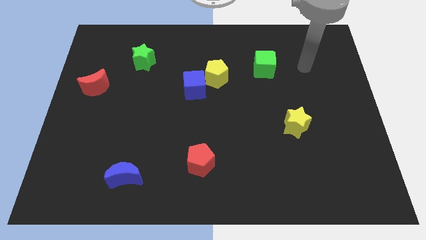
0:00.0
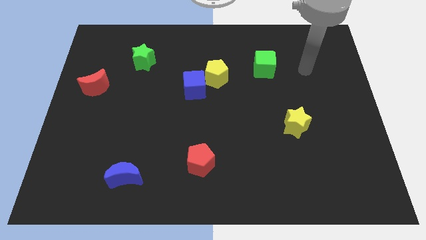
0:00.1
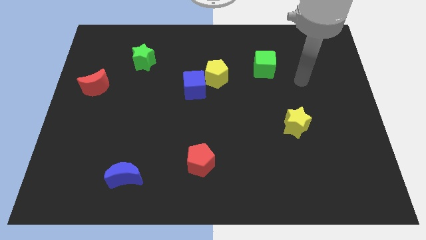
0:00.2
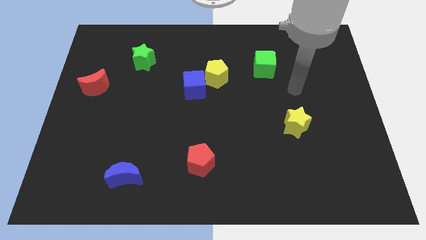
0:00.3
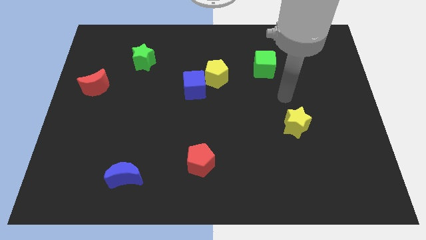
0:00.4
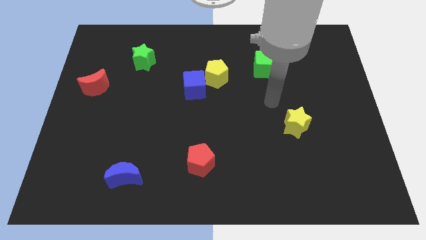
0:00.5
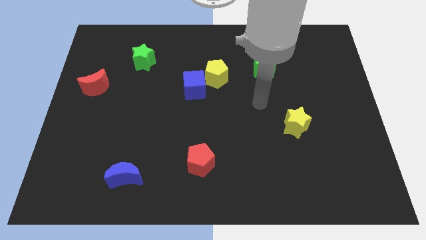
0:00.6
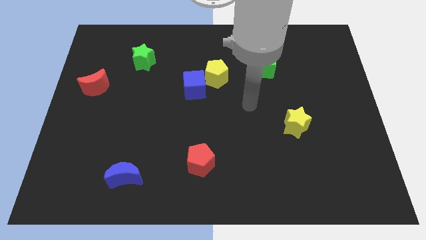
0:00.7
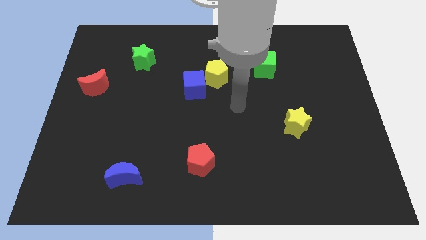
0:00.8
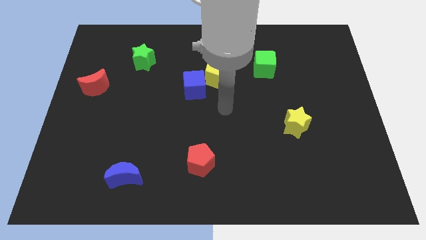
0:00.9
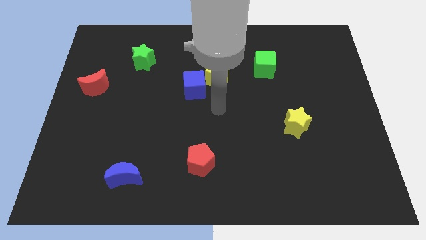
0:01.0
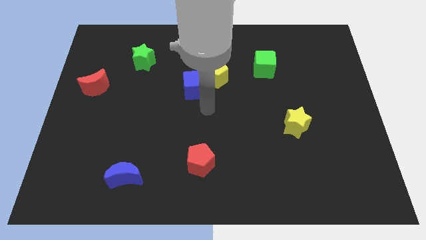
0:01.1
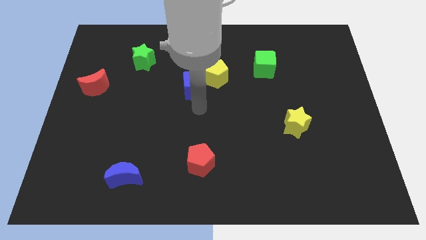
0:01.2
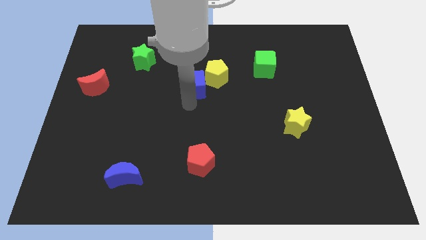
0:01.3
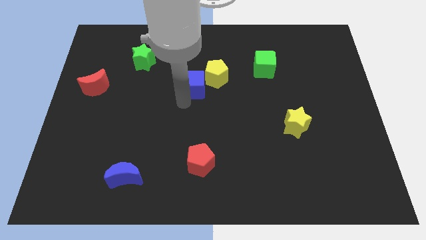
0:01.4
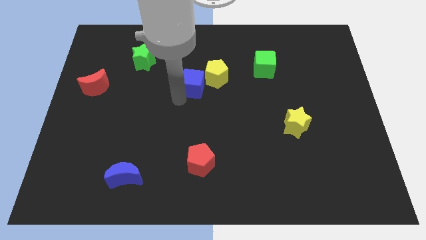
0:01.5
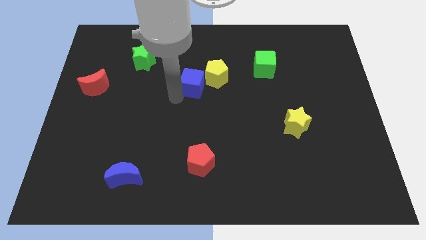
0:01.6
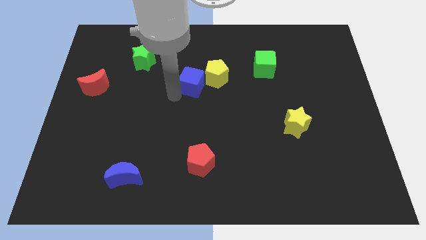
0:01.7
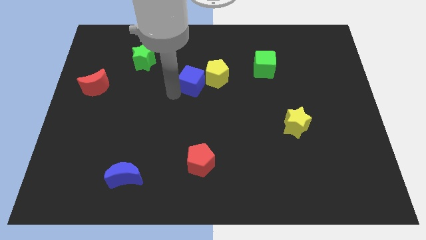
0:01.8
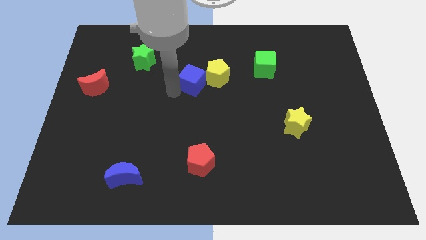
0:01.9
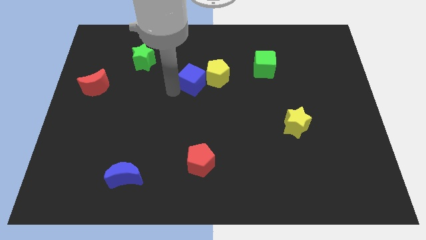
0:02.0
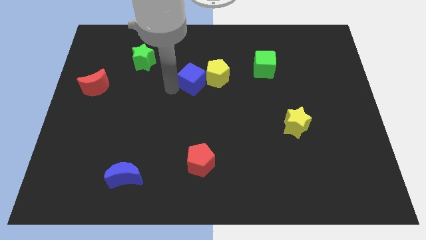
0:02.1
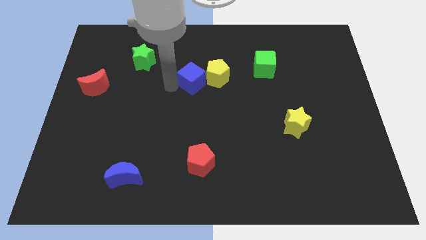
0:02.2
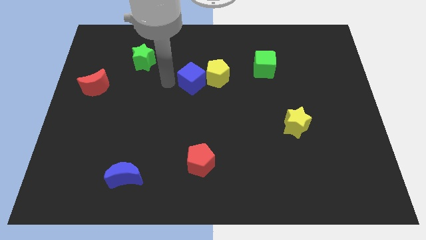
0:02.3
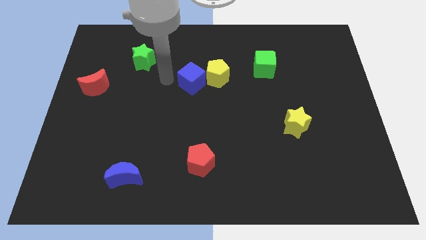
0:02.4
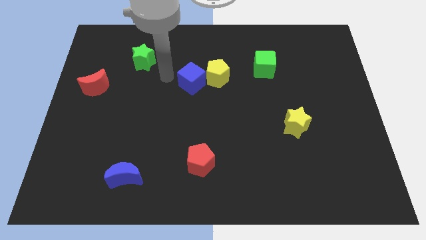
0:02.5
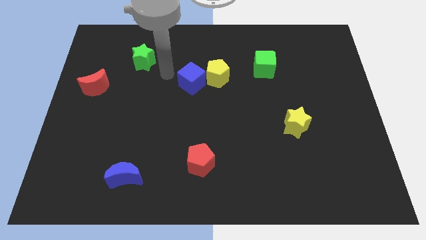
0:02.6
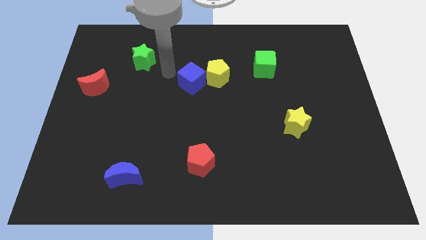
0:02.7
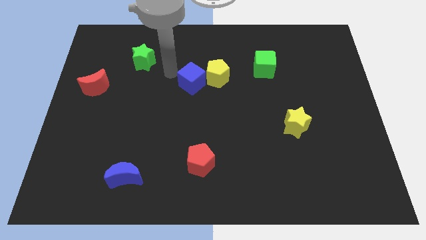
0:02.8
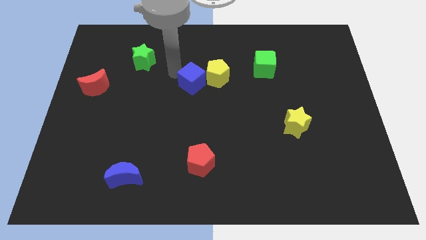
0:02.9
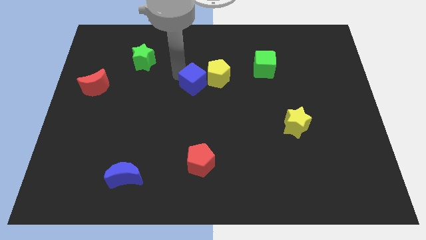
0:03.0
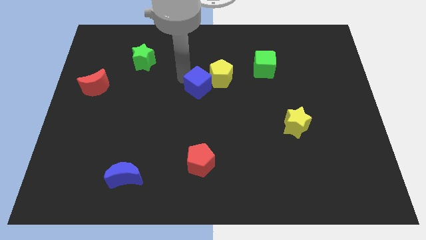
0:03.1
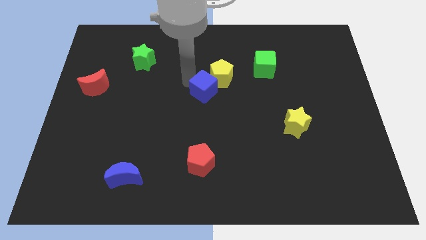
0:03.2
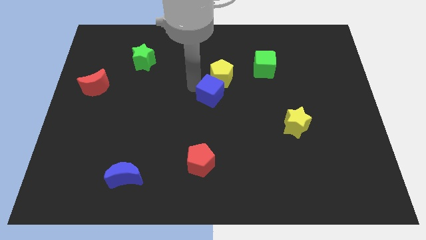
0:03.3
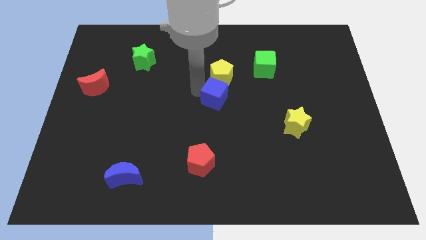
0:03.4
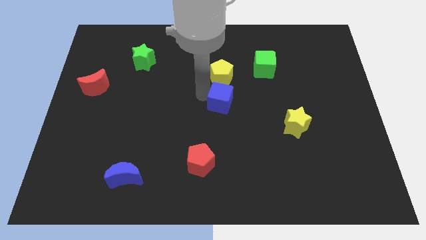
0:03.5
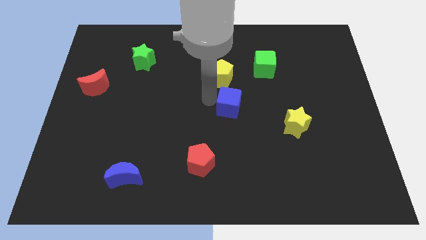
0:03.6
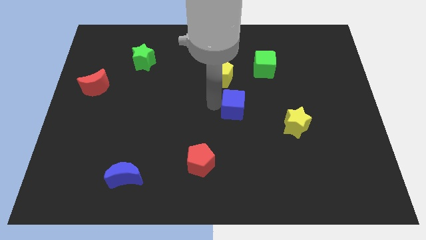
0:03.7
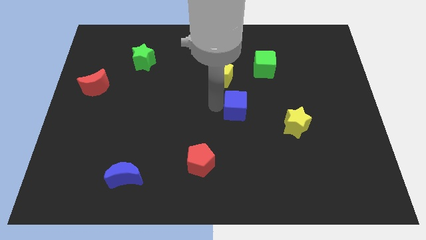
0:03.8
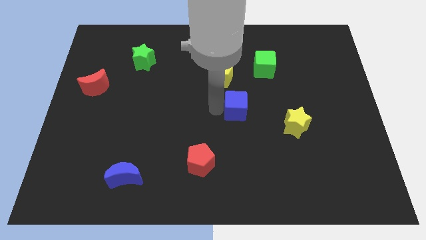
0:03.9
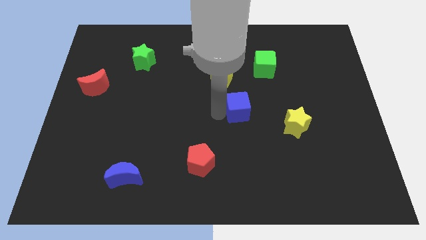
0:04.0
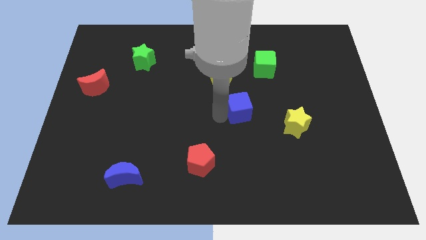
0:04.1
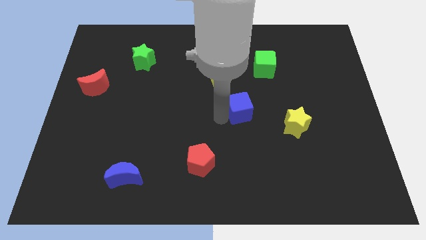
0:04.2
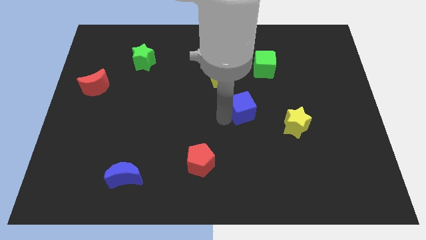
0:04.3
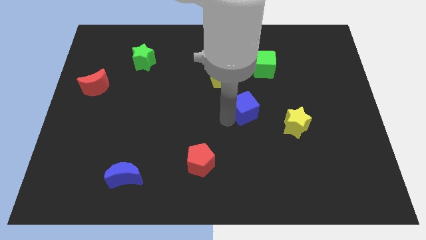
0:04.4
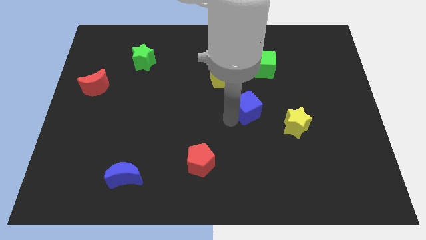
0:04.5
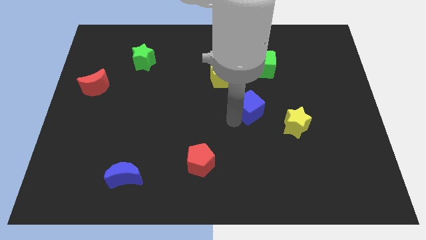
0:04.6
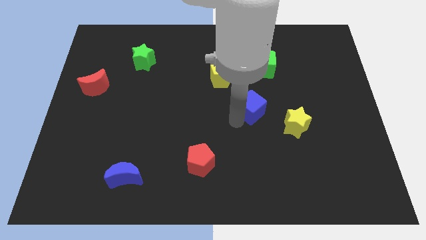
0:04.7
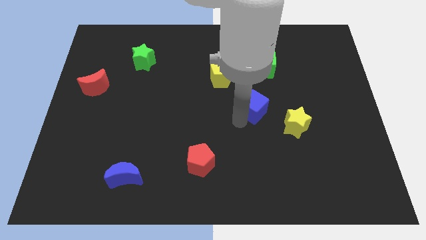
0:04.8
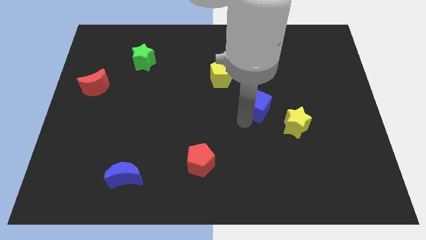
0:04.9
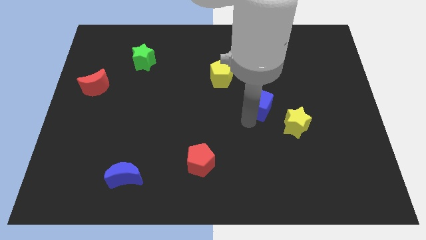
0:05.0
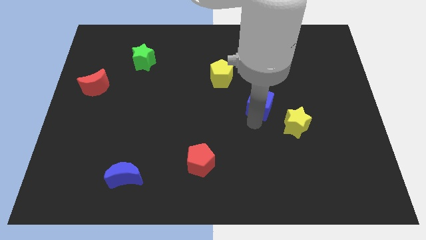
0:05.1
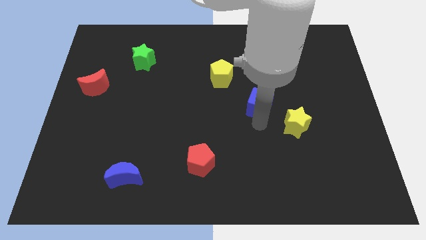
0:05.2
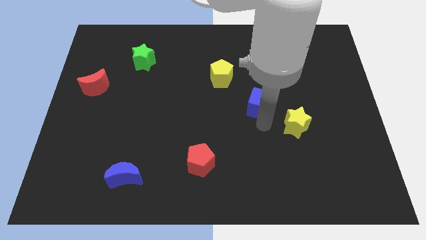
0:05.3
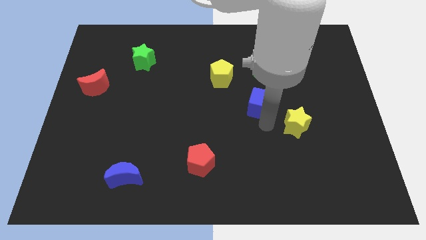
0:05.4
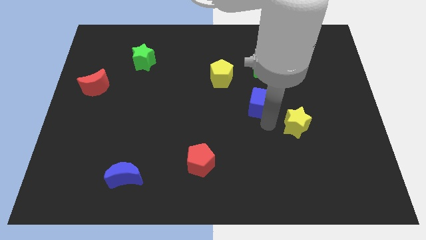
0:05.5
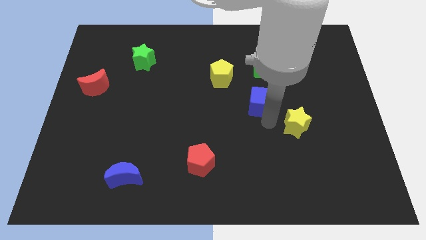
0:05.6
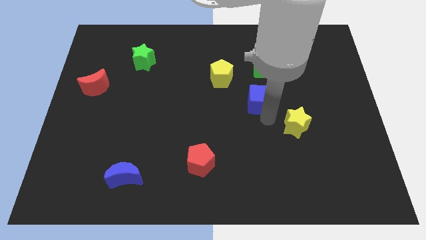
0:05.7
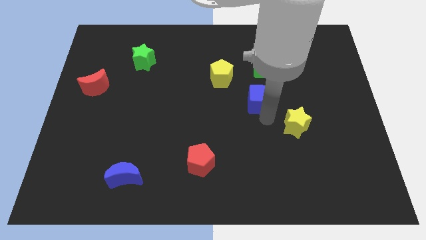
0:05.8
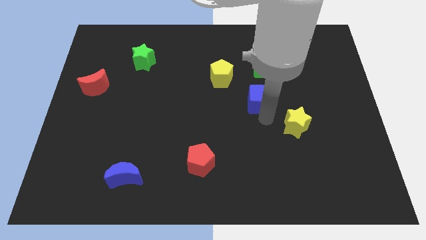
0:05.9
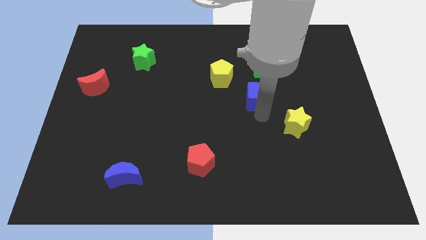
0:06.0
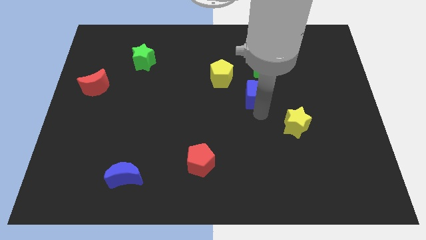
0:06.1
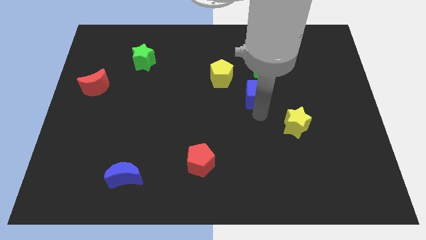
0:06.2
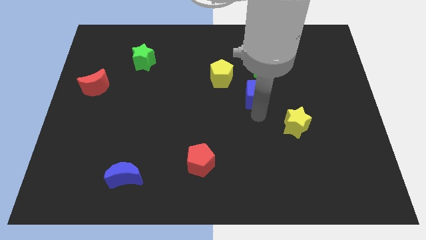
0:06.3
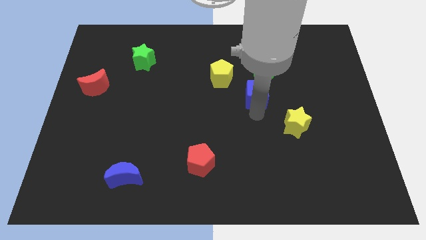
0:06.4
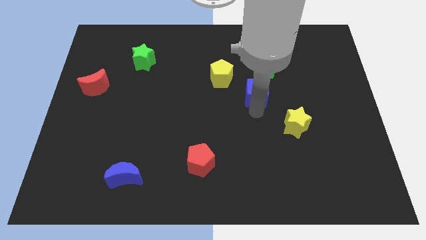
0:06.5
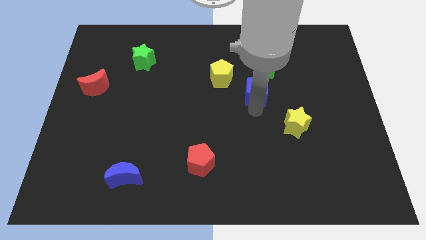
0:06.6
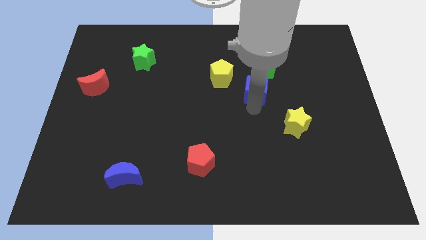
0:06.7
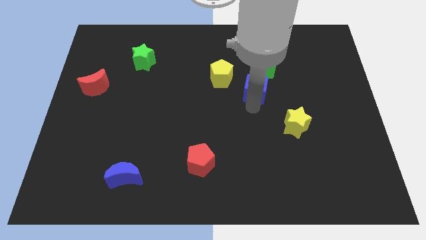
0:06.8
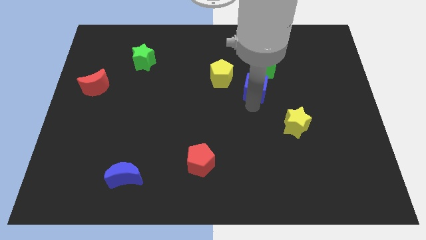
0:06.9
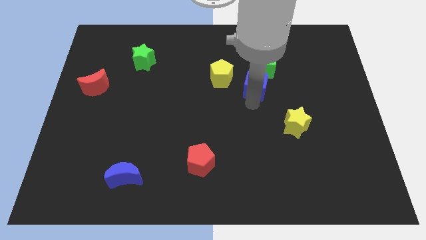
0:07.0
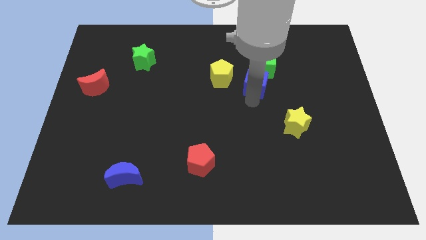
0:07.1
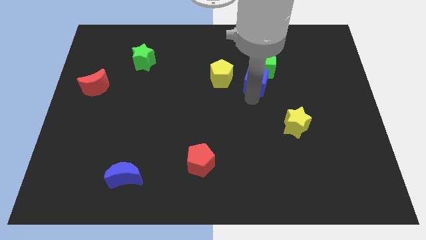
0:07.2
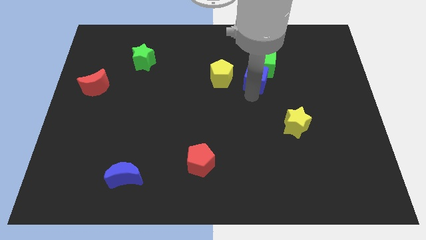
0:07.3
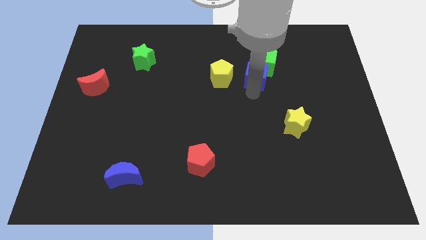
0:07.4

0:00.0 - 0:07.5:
push the blue cube close to the green cube

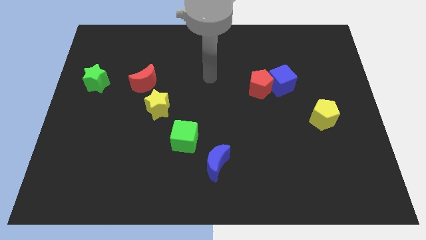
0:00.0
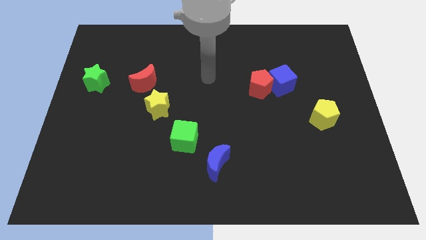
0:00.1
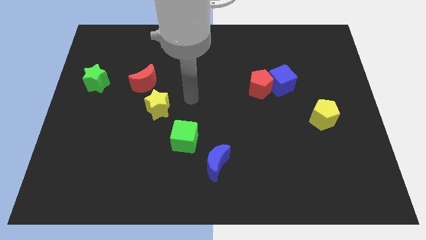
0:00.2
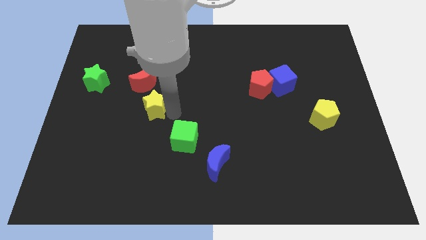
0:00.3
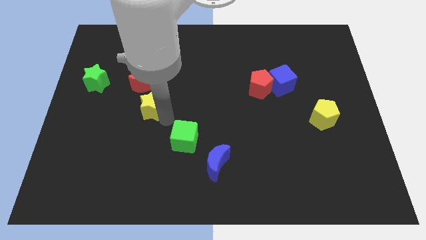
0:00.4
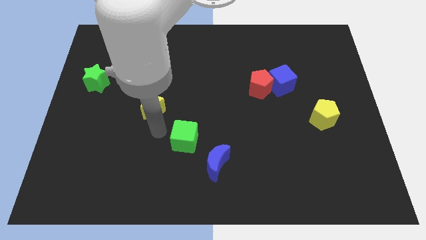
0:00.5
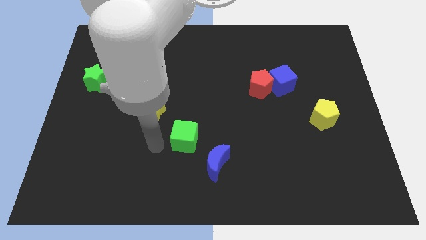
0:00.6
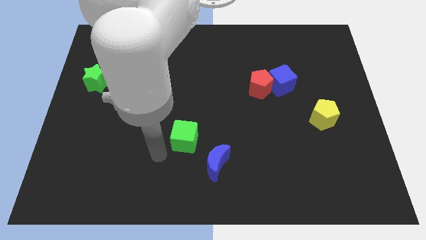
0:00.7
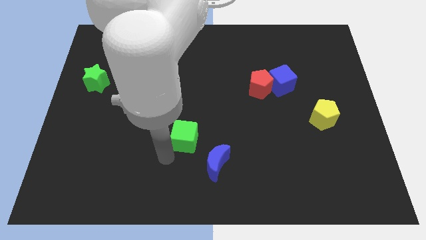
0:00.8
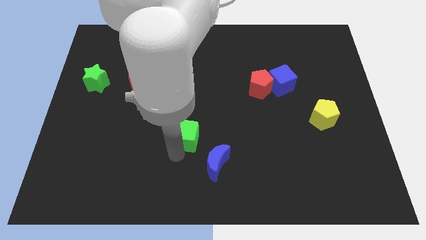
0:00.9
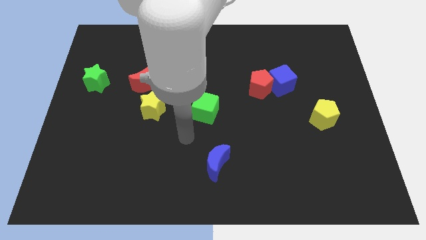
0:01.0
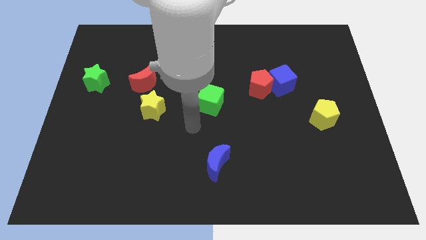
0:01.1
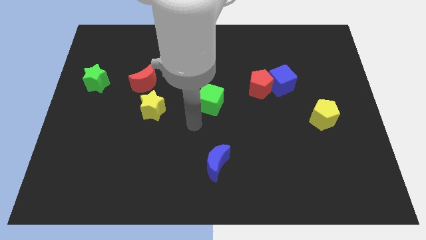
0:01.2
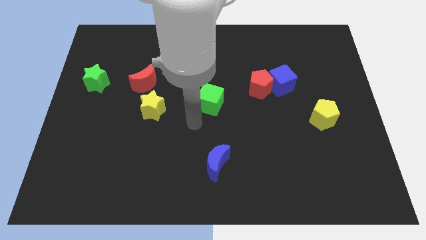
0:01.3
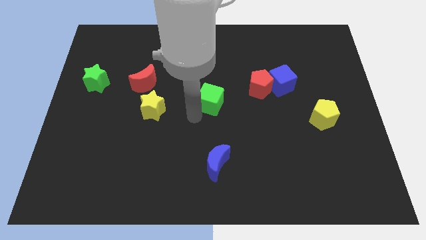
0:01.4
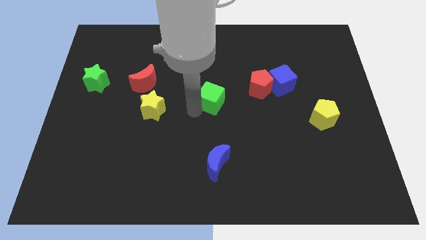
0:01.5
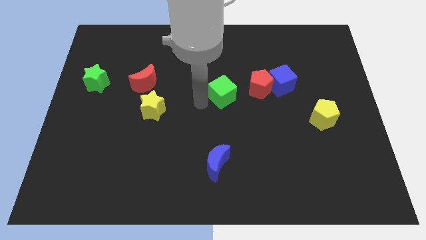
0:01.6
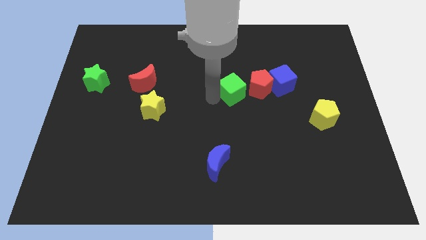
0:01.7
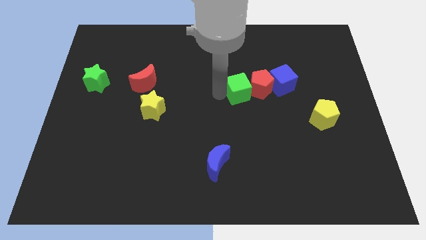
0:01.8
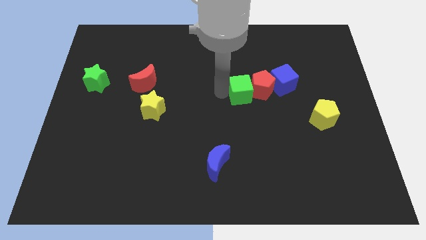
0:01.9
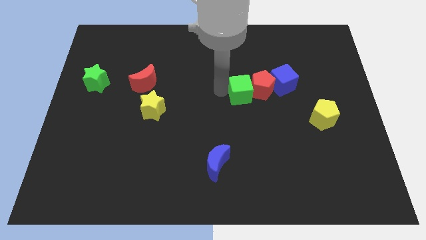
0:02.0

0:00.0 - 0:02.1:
slide the green cube to the red pentagon
